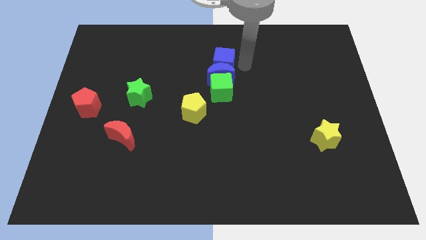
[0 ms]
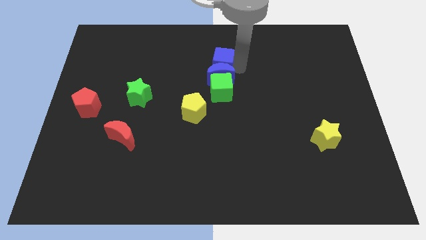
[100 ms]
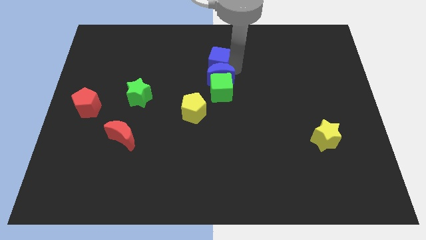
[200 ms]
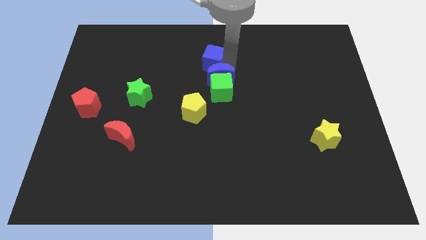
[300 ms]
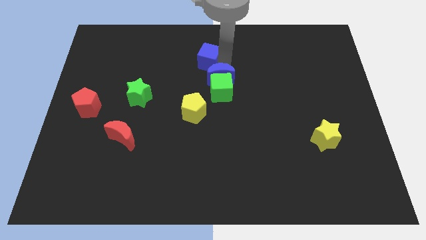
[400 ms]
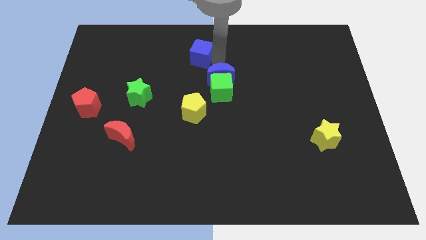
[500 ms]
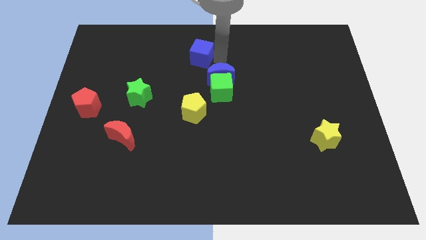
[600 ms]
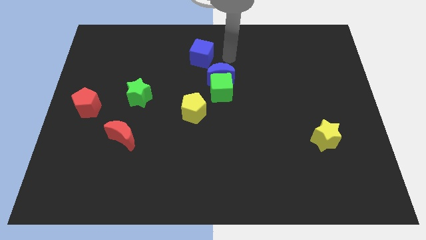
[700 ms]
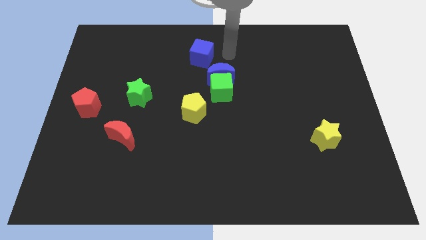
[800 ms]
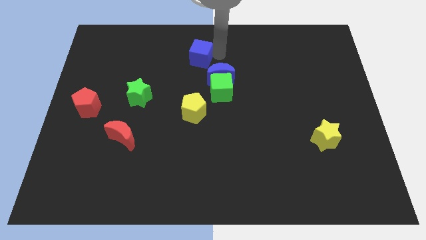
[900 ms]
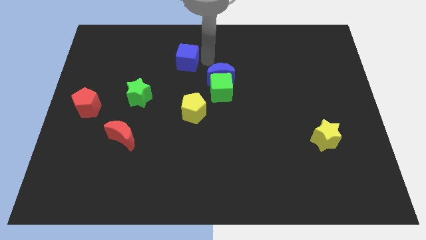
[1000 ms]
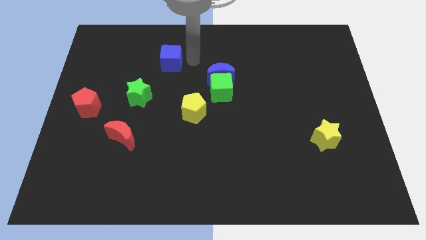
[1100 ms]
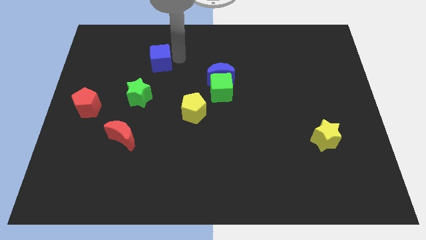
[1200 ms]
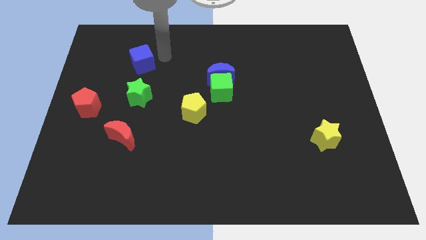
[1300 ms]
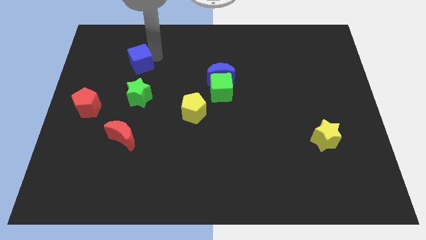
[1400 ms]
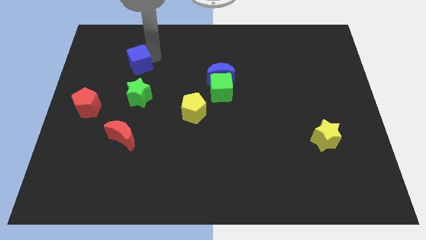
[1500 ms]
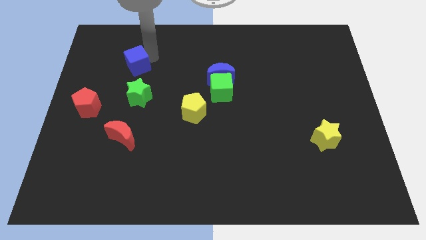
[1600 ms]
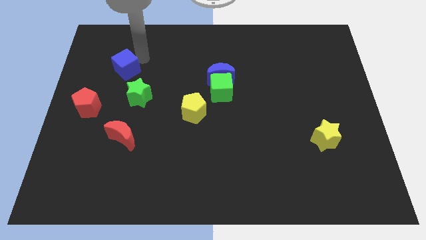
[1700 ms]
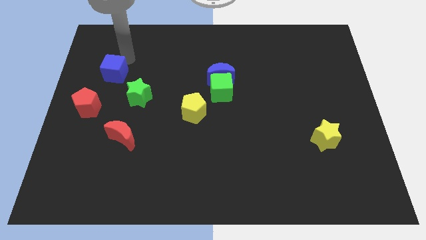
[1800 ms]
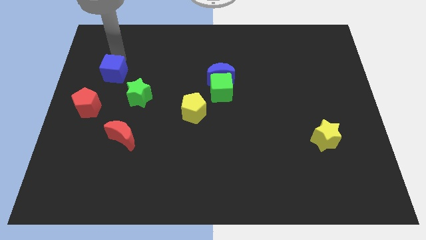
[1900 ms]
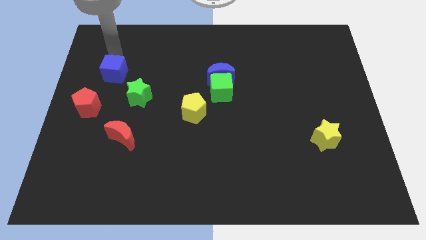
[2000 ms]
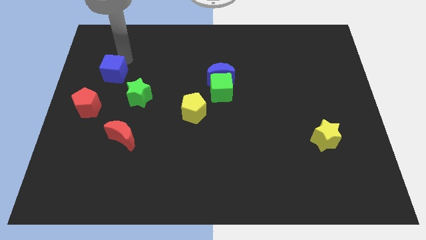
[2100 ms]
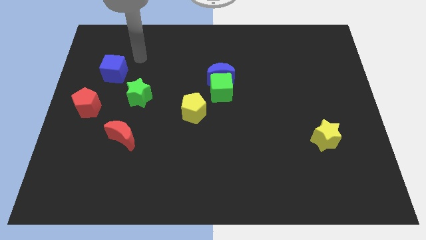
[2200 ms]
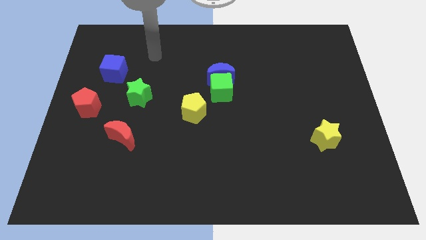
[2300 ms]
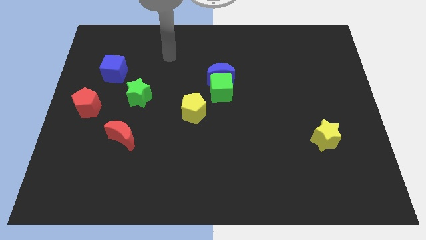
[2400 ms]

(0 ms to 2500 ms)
move the blue cube away from the blue moon

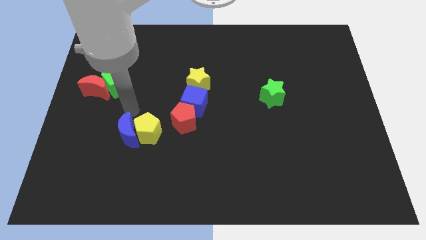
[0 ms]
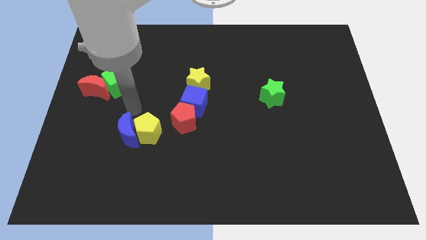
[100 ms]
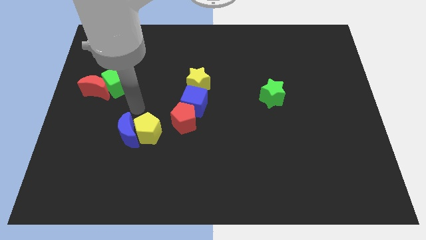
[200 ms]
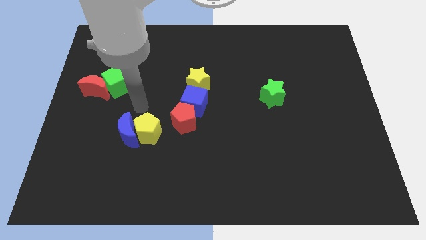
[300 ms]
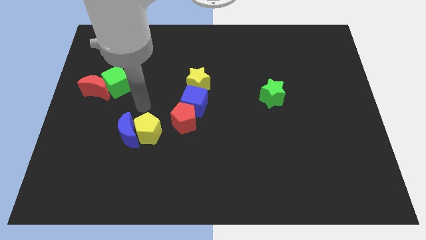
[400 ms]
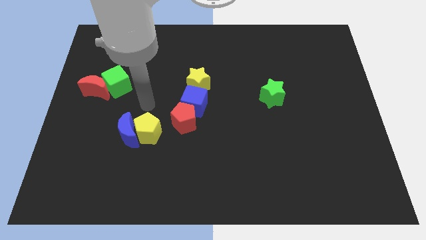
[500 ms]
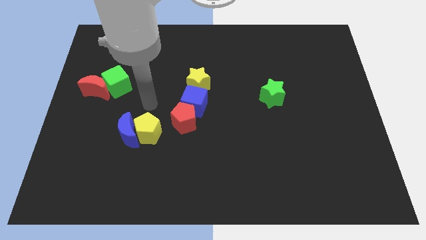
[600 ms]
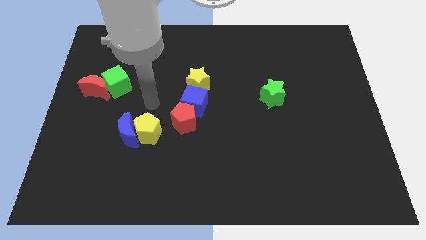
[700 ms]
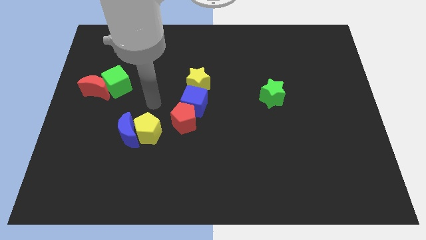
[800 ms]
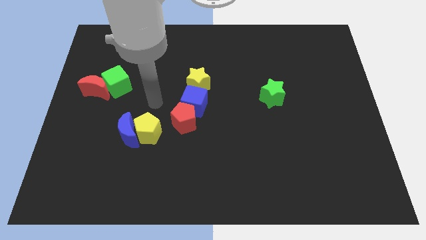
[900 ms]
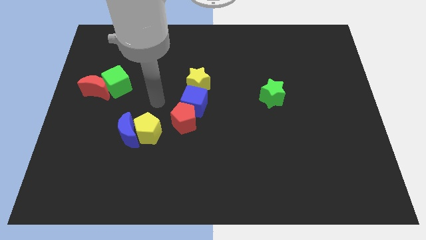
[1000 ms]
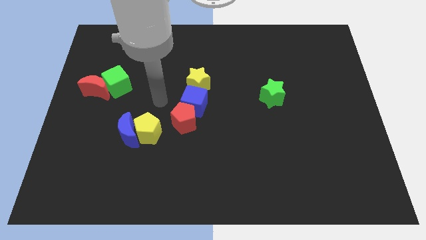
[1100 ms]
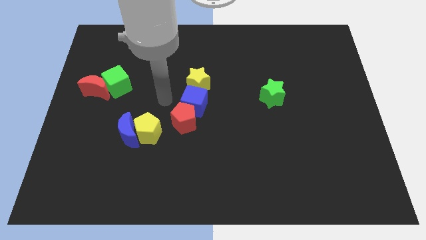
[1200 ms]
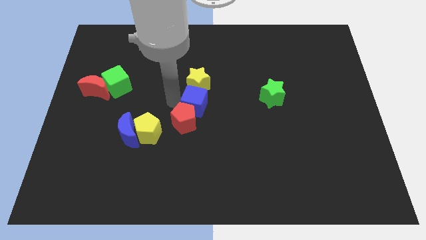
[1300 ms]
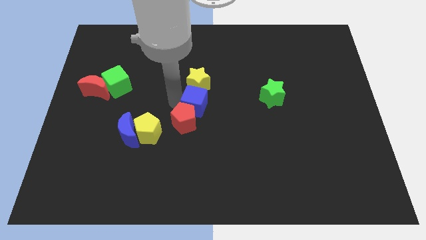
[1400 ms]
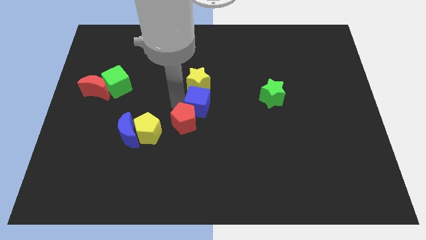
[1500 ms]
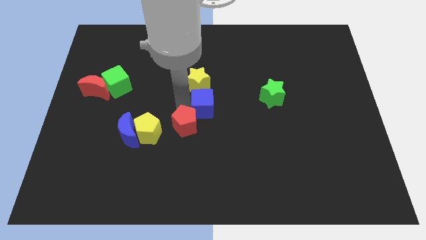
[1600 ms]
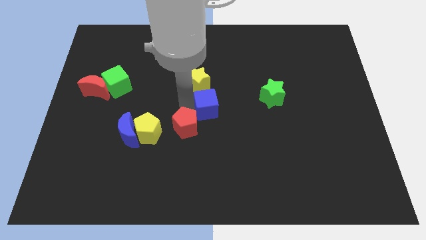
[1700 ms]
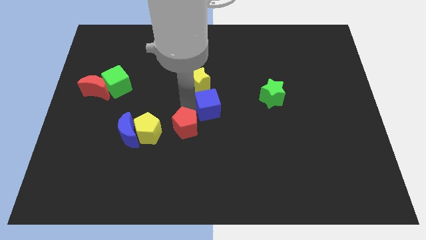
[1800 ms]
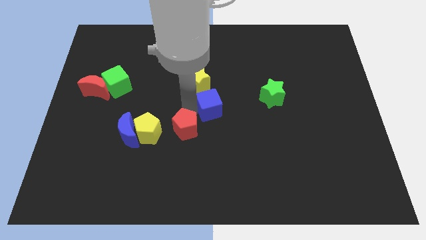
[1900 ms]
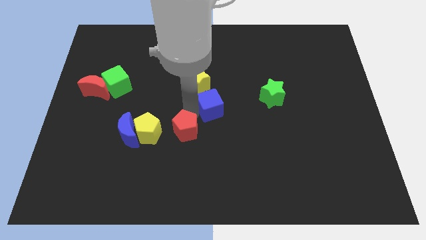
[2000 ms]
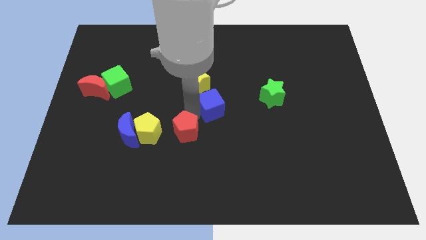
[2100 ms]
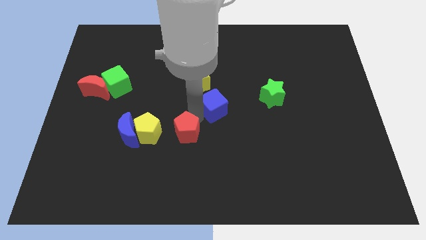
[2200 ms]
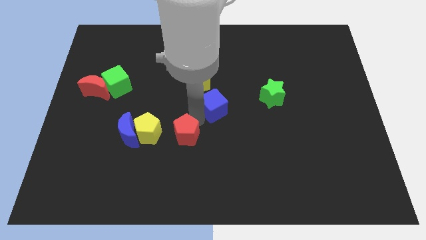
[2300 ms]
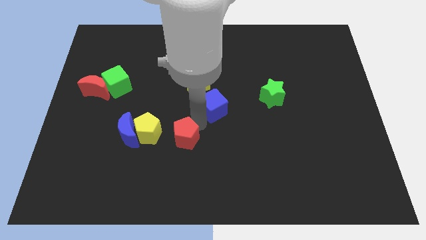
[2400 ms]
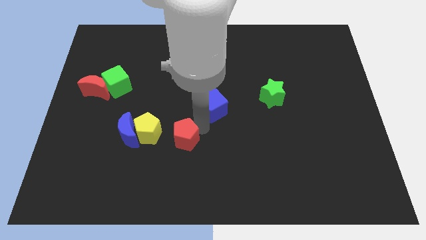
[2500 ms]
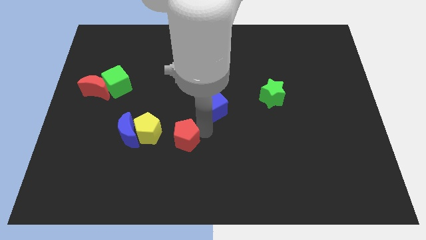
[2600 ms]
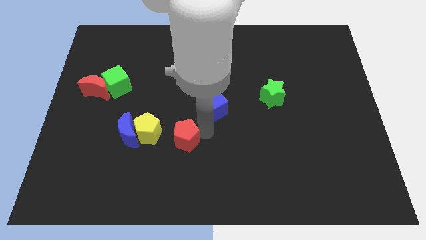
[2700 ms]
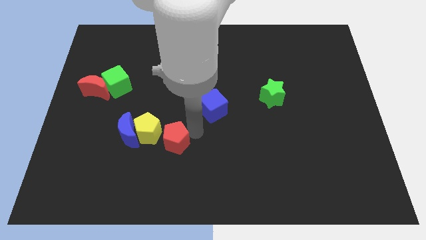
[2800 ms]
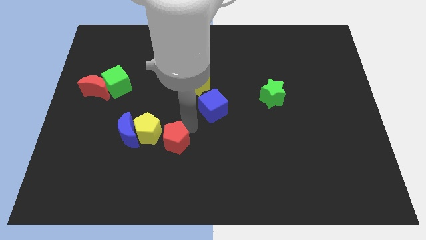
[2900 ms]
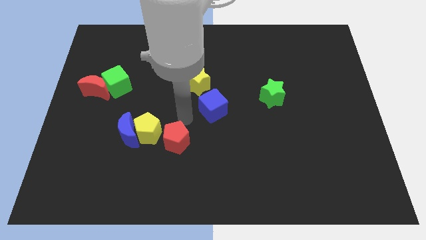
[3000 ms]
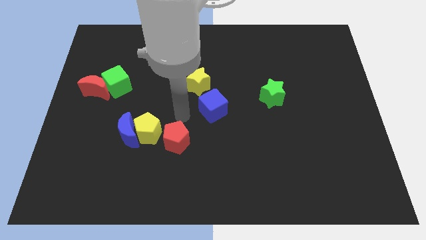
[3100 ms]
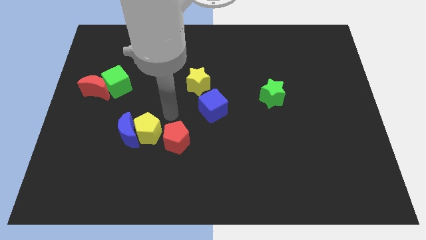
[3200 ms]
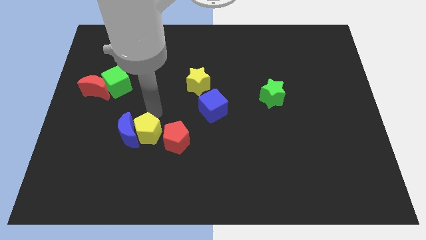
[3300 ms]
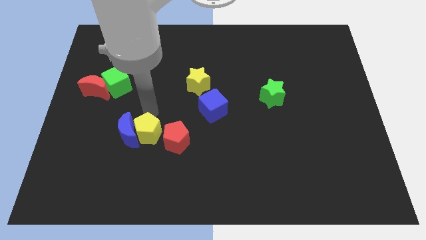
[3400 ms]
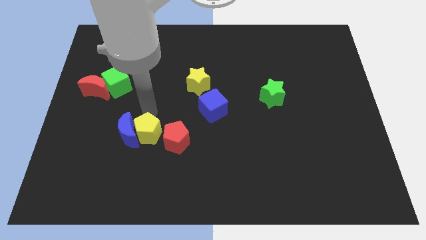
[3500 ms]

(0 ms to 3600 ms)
push the red pentagon right to the yellow pentagon

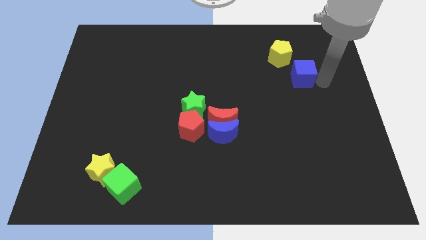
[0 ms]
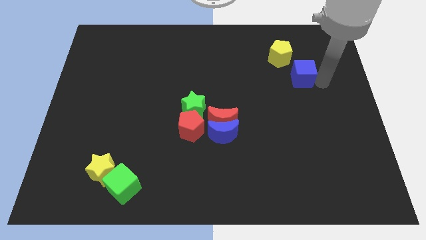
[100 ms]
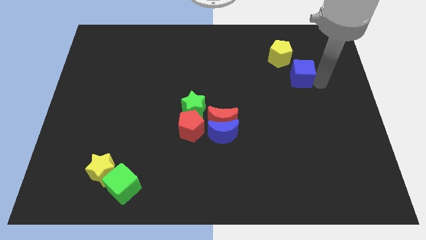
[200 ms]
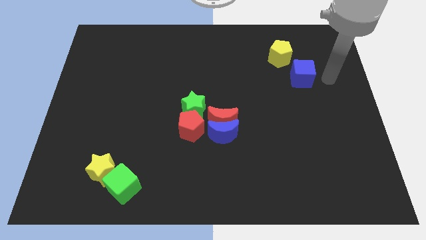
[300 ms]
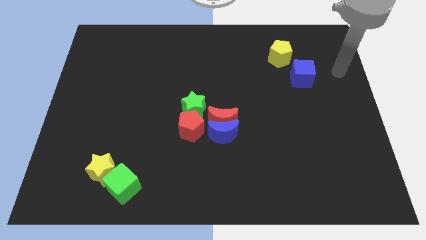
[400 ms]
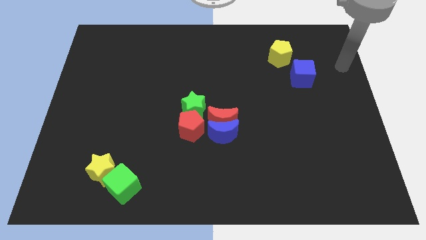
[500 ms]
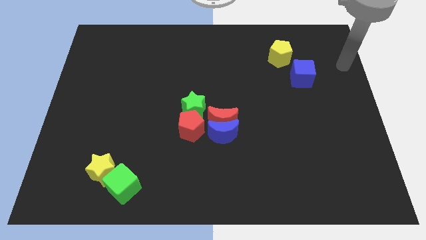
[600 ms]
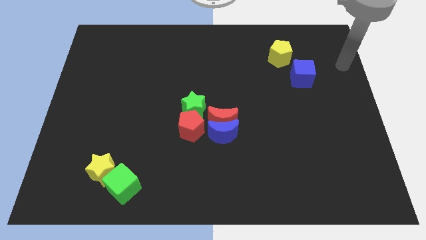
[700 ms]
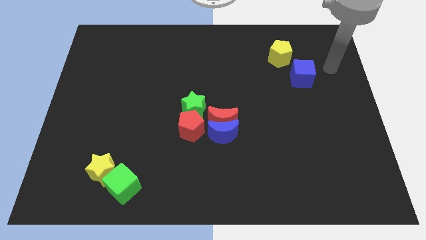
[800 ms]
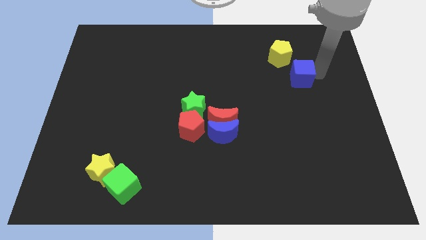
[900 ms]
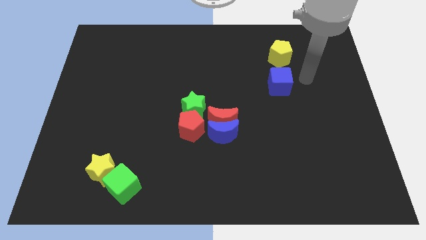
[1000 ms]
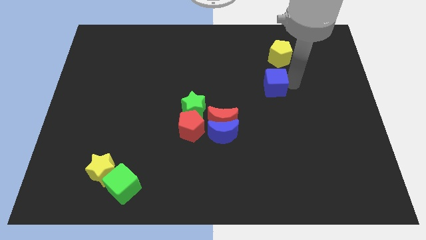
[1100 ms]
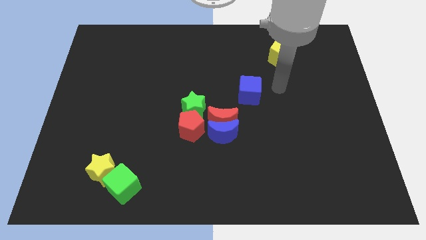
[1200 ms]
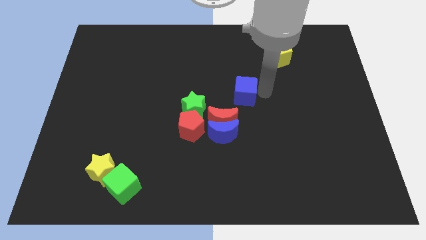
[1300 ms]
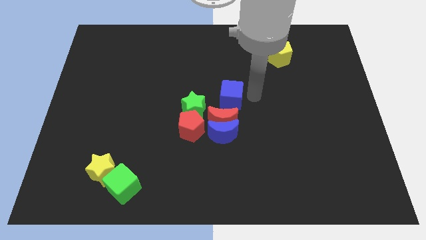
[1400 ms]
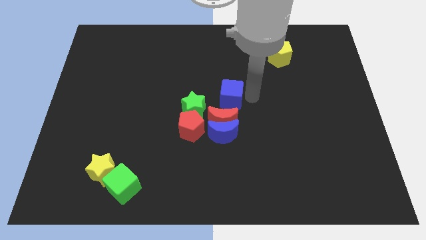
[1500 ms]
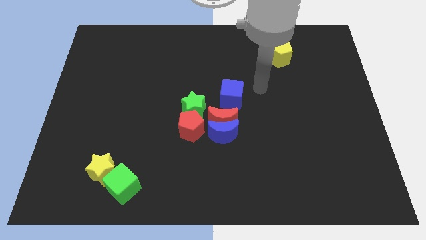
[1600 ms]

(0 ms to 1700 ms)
move the blue cube towards the red crescent

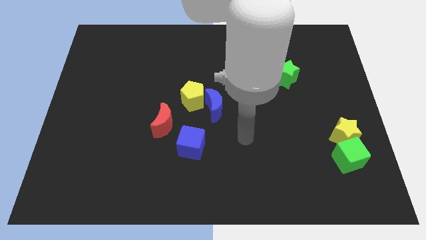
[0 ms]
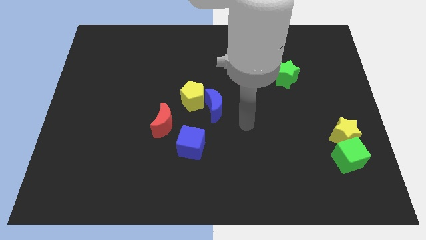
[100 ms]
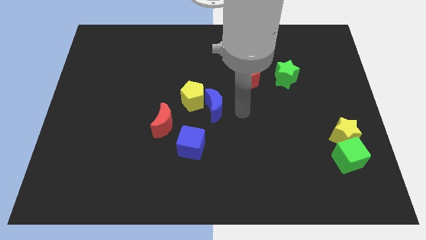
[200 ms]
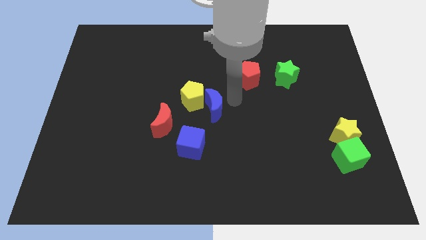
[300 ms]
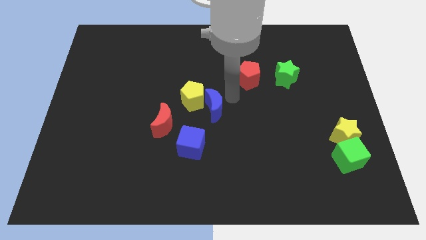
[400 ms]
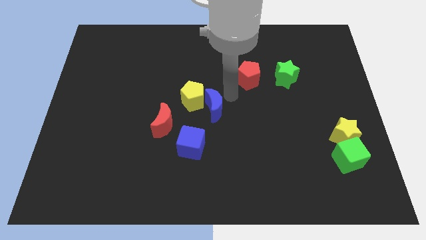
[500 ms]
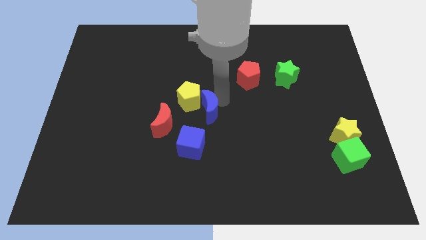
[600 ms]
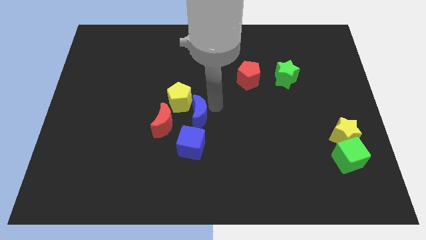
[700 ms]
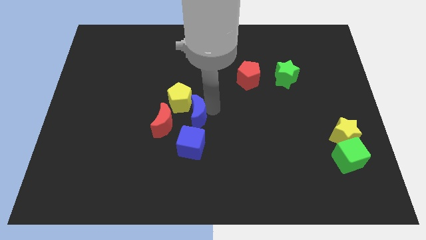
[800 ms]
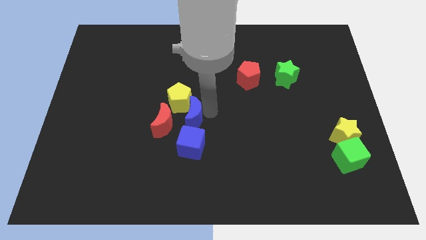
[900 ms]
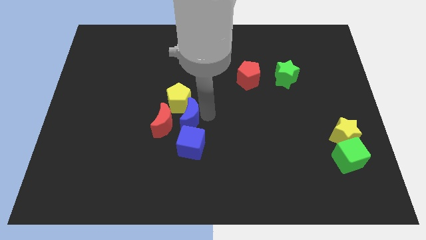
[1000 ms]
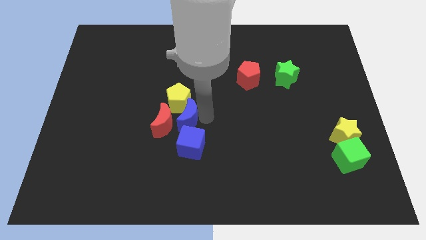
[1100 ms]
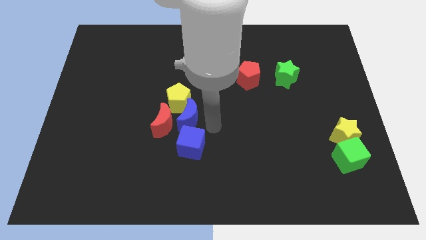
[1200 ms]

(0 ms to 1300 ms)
push the blue crescent into the yellow pentagon
